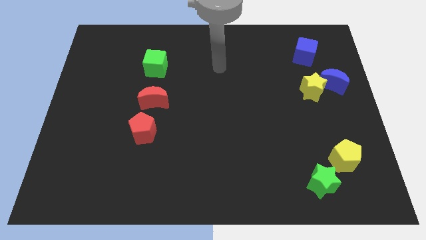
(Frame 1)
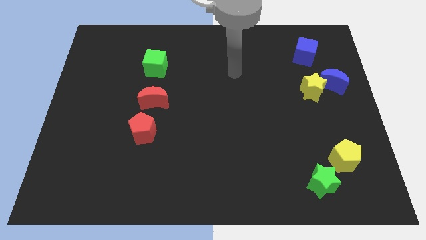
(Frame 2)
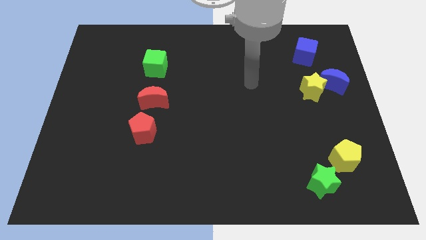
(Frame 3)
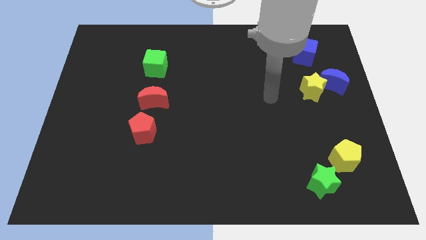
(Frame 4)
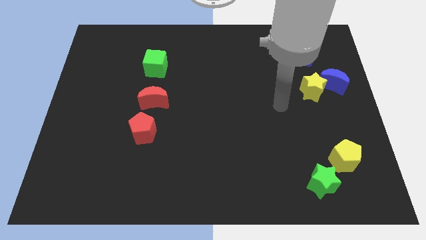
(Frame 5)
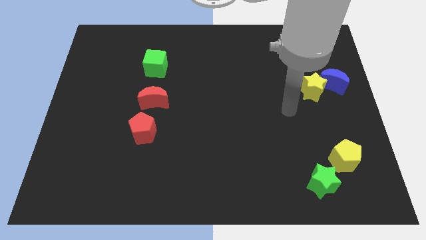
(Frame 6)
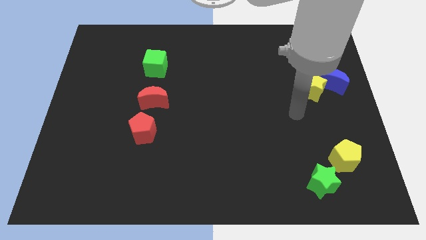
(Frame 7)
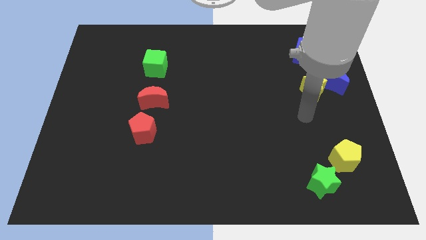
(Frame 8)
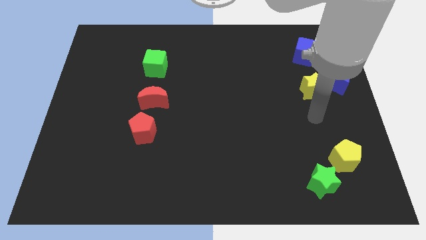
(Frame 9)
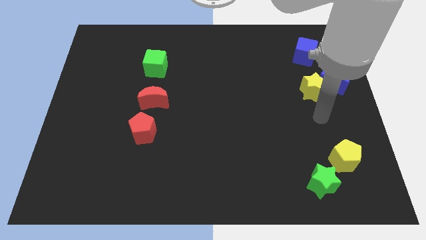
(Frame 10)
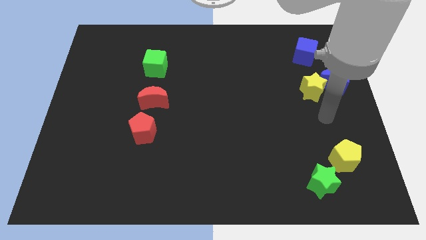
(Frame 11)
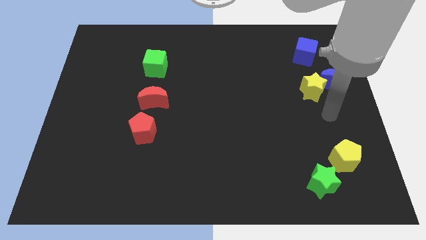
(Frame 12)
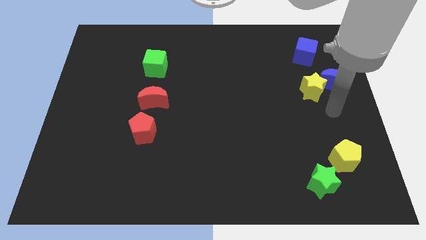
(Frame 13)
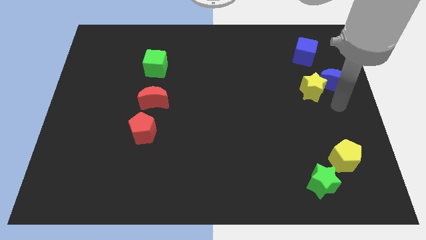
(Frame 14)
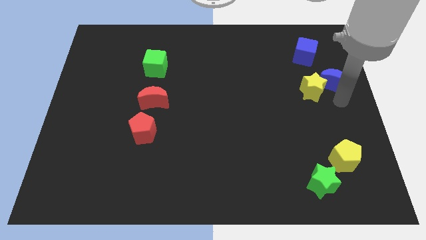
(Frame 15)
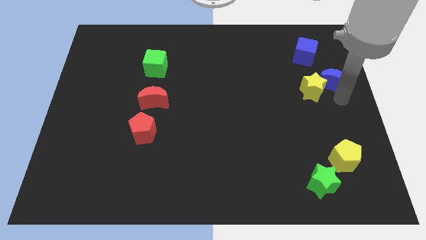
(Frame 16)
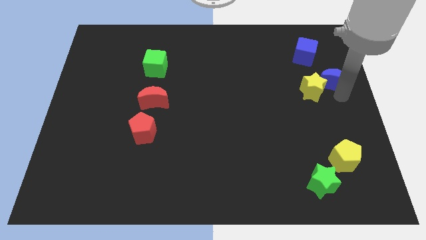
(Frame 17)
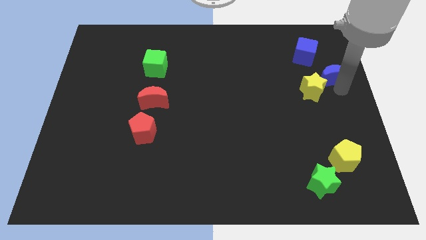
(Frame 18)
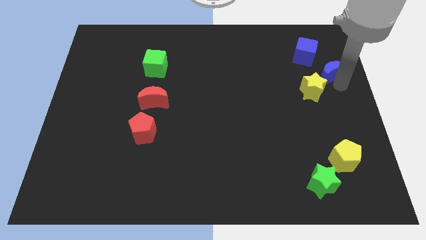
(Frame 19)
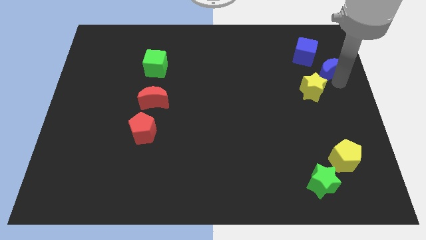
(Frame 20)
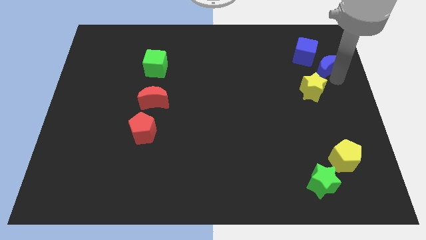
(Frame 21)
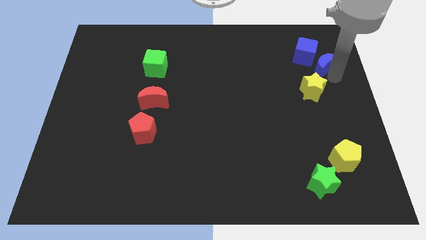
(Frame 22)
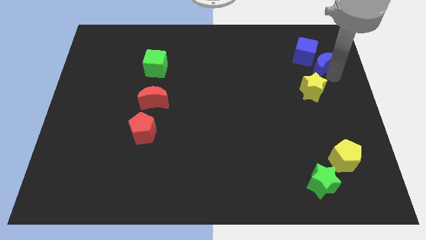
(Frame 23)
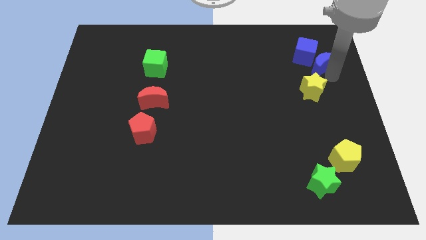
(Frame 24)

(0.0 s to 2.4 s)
put the blue moon to the blue cube

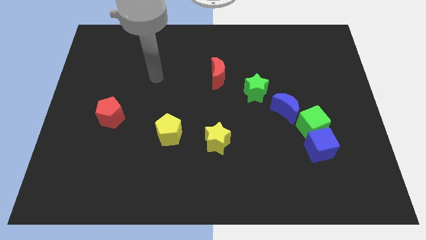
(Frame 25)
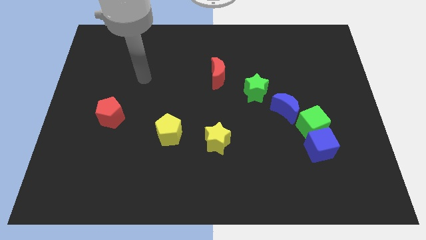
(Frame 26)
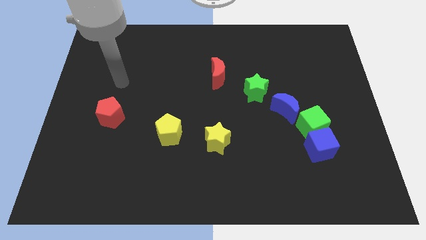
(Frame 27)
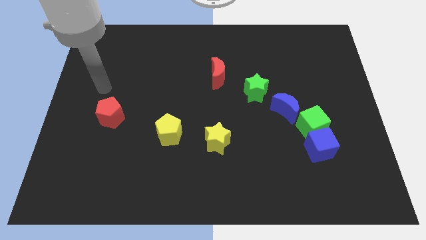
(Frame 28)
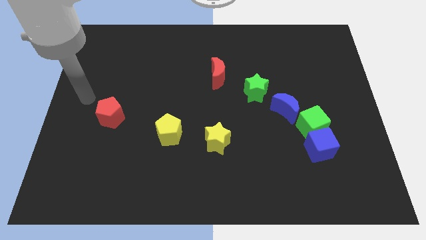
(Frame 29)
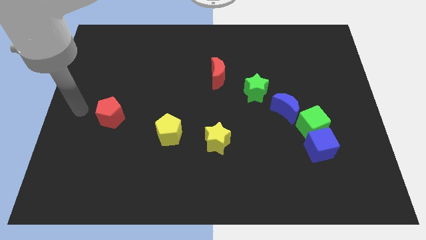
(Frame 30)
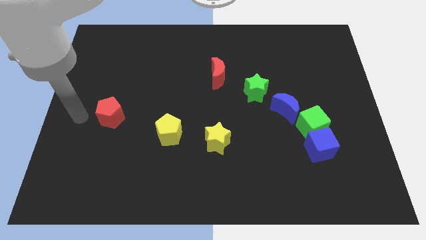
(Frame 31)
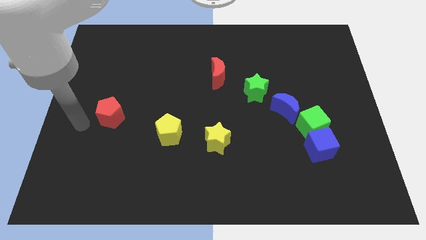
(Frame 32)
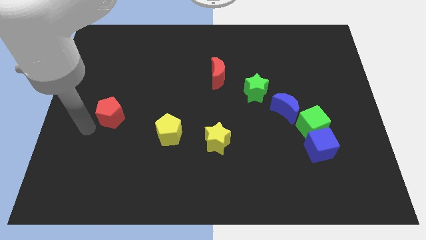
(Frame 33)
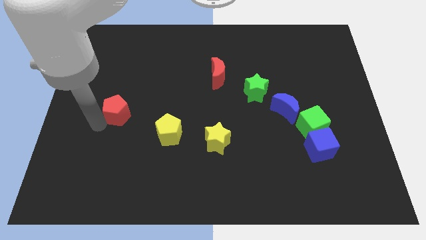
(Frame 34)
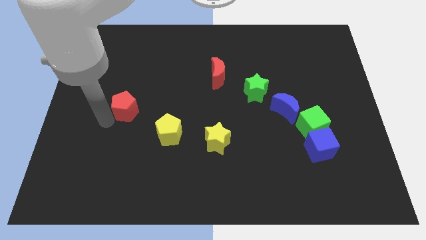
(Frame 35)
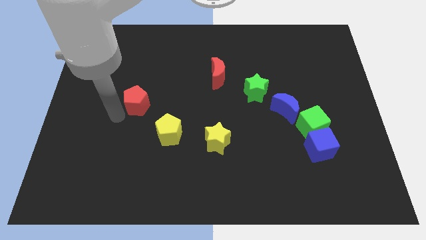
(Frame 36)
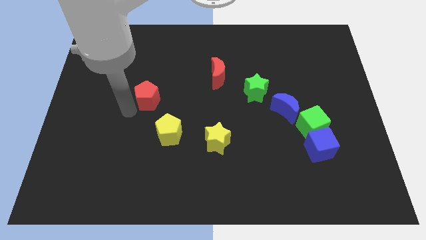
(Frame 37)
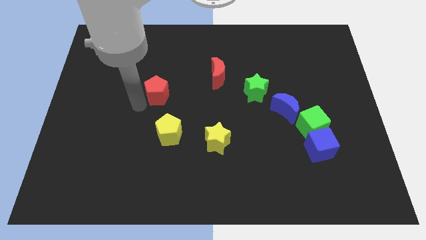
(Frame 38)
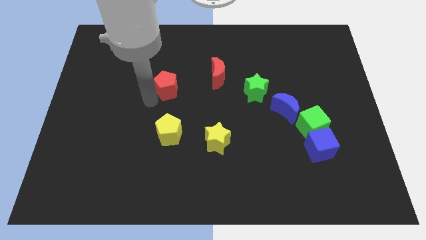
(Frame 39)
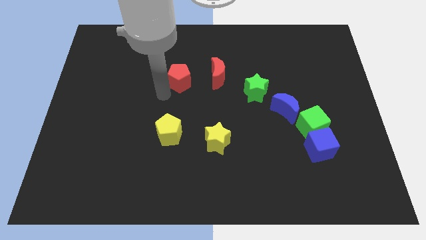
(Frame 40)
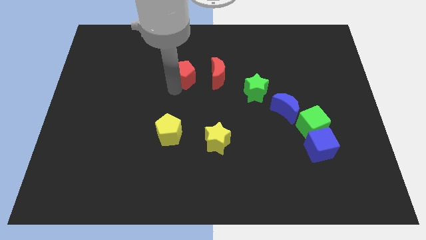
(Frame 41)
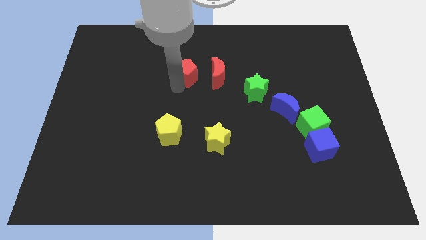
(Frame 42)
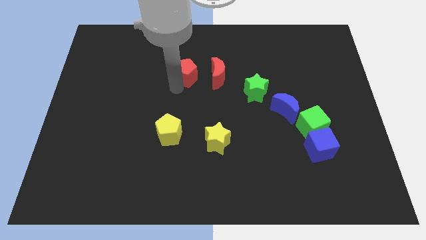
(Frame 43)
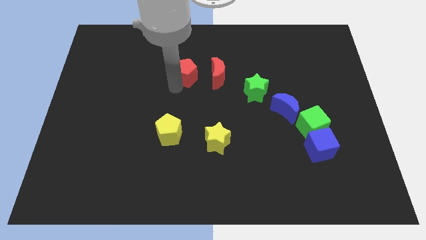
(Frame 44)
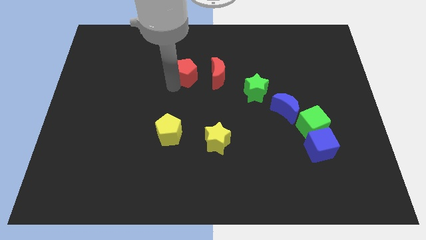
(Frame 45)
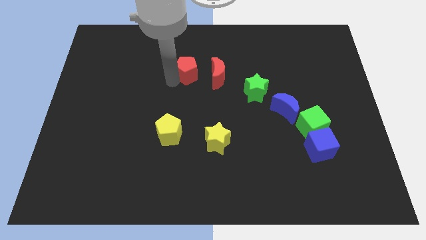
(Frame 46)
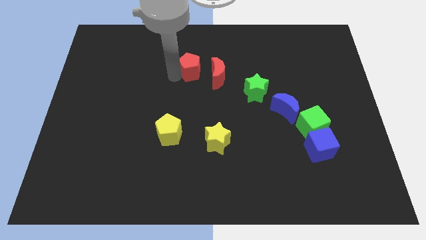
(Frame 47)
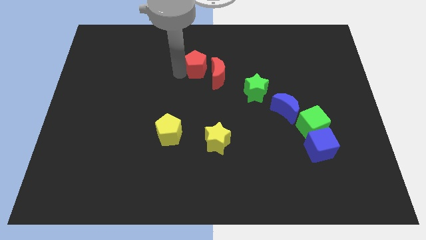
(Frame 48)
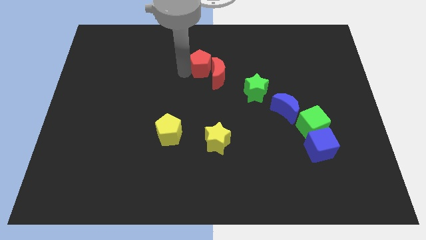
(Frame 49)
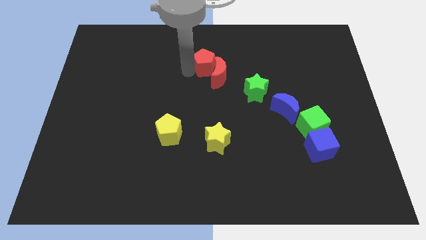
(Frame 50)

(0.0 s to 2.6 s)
move the red pentagon towards the red moon

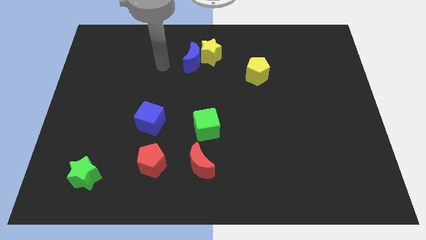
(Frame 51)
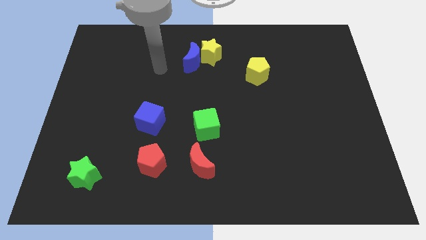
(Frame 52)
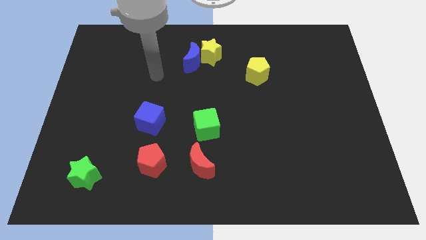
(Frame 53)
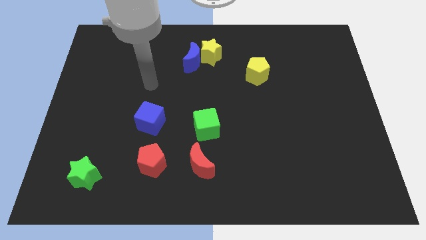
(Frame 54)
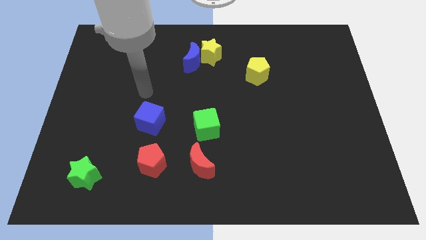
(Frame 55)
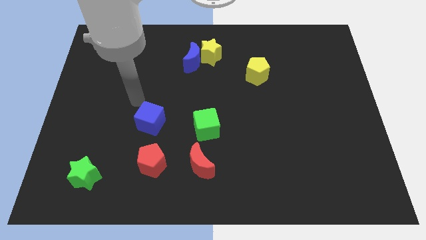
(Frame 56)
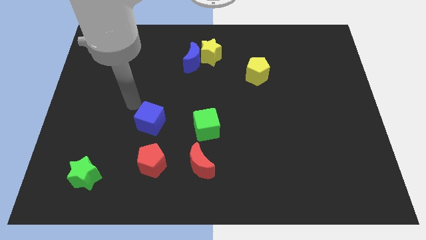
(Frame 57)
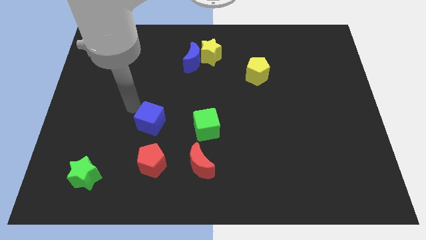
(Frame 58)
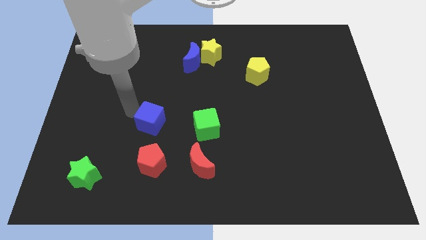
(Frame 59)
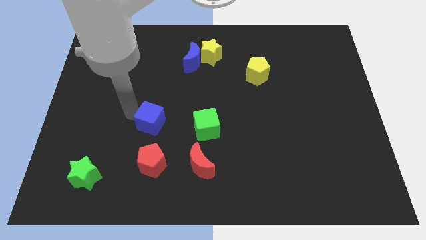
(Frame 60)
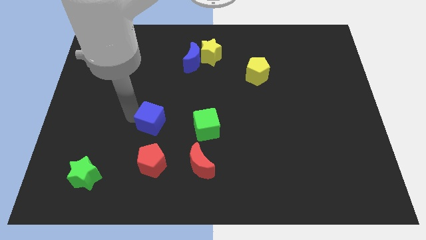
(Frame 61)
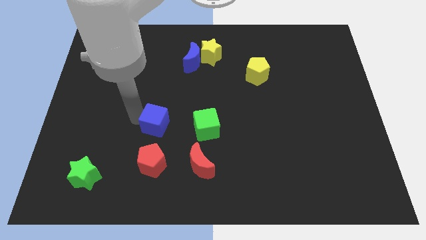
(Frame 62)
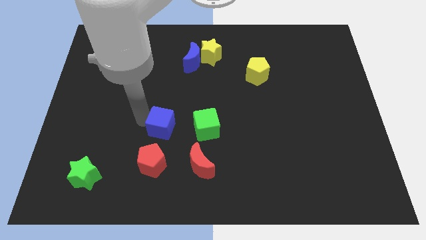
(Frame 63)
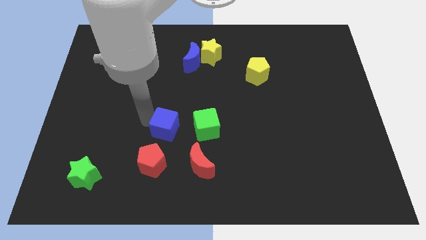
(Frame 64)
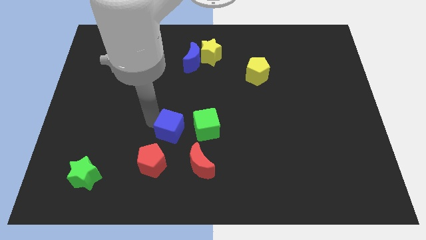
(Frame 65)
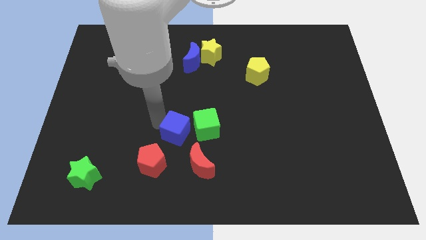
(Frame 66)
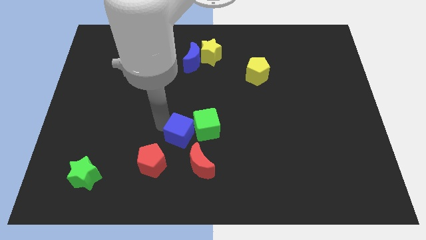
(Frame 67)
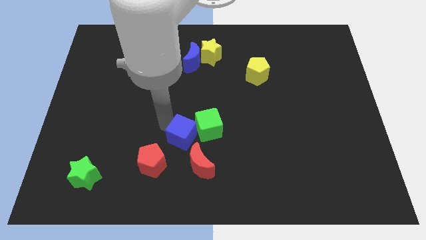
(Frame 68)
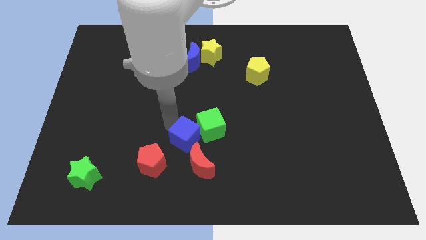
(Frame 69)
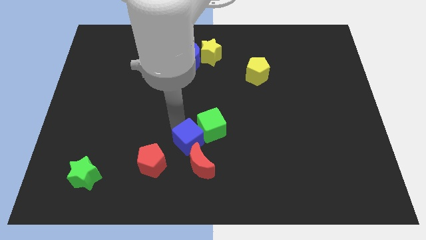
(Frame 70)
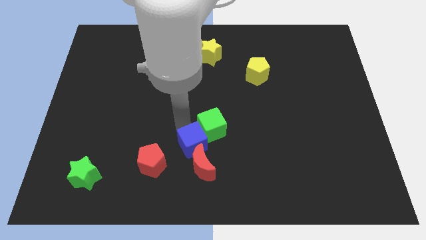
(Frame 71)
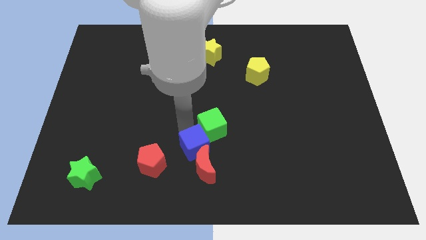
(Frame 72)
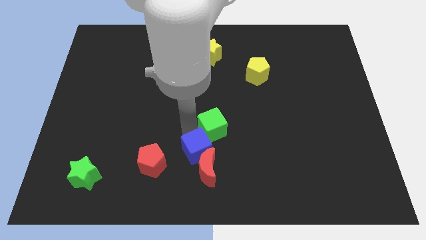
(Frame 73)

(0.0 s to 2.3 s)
slide the blue cube next to the red moon

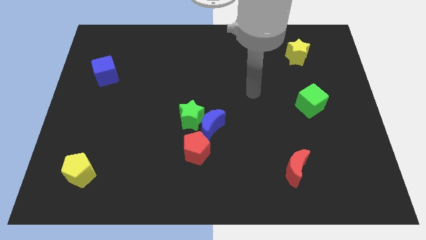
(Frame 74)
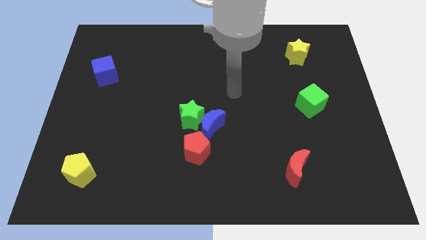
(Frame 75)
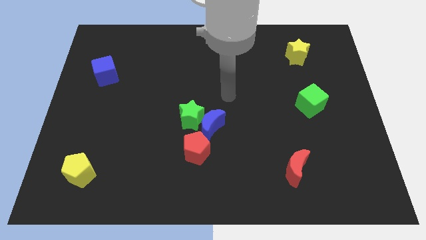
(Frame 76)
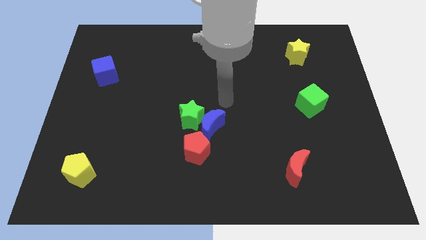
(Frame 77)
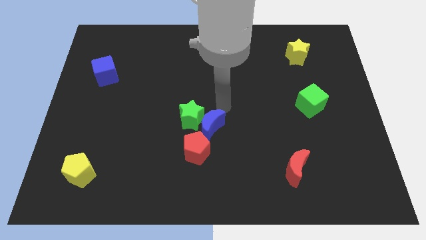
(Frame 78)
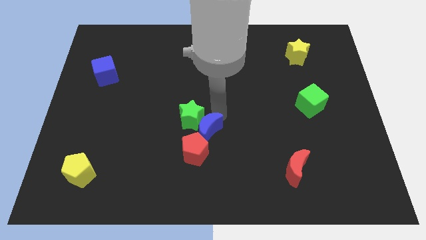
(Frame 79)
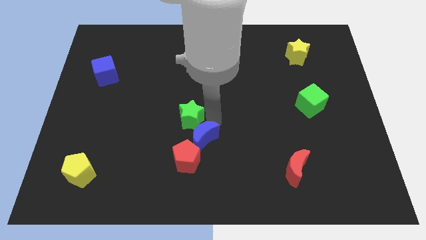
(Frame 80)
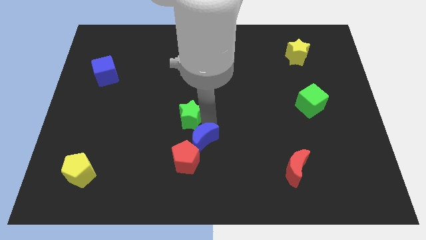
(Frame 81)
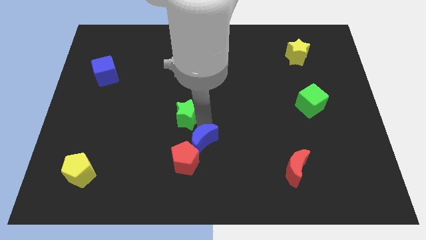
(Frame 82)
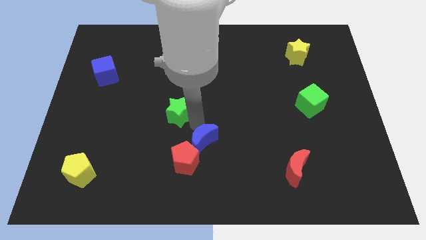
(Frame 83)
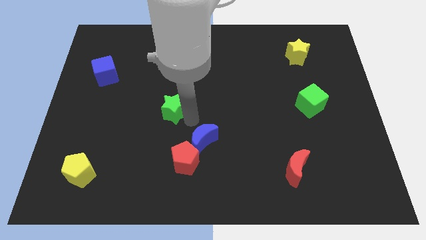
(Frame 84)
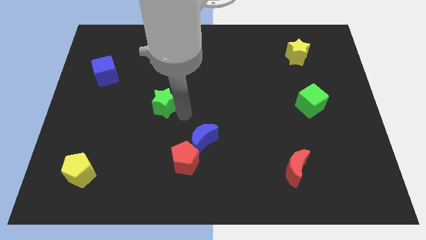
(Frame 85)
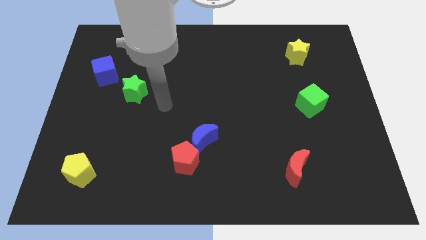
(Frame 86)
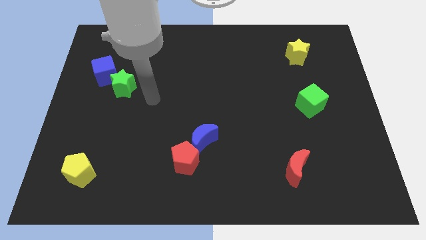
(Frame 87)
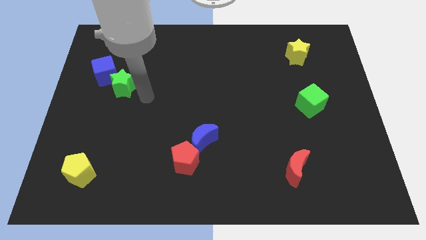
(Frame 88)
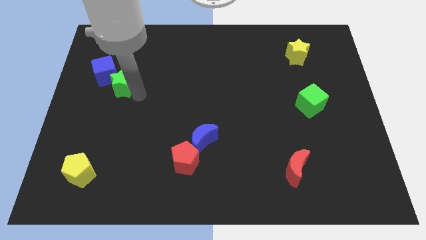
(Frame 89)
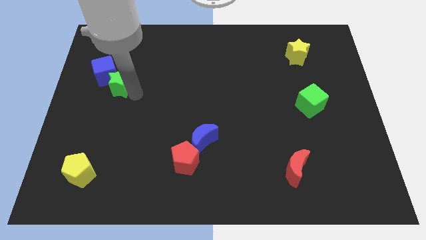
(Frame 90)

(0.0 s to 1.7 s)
move the green star next to the blue cube
